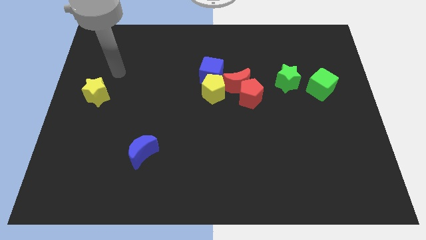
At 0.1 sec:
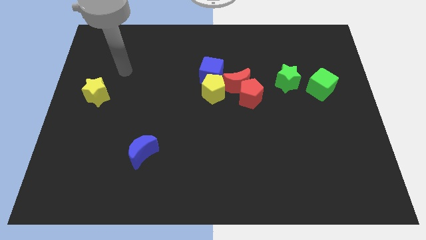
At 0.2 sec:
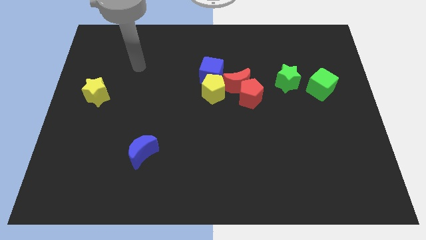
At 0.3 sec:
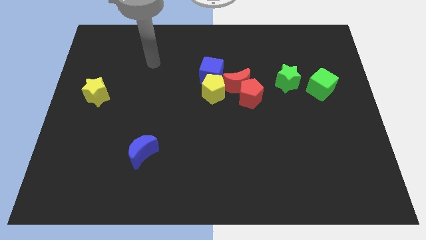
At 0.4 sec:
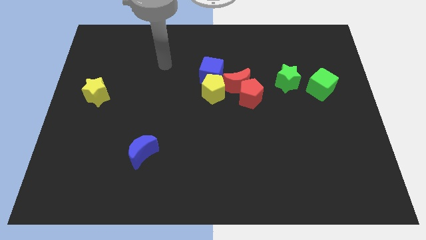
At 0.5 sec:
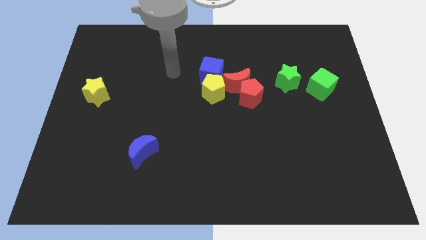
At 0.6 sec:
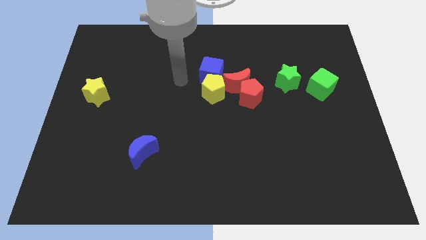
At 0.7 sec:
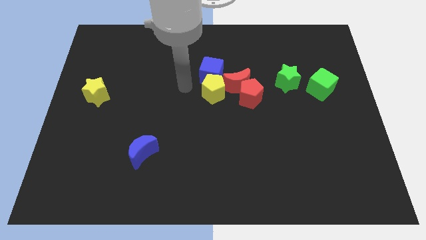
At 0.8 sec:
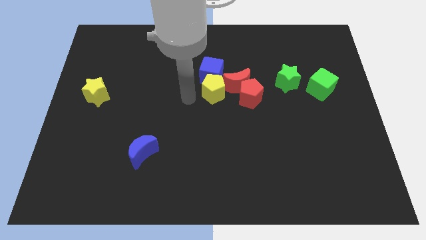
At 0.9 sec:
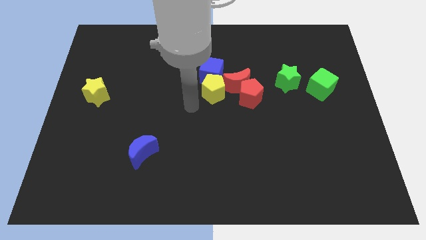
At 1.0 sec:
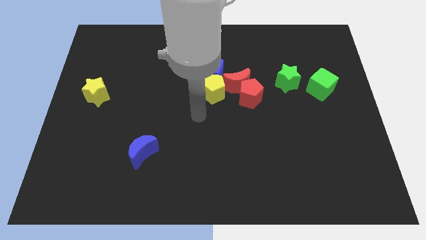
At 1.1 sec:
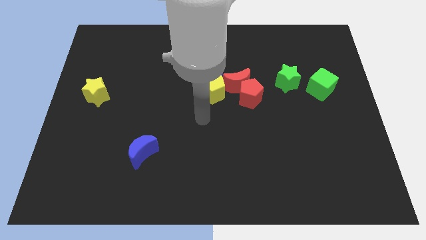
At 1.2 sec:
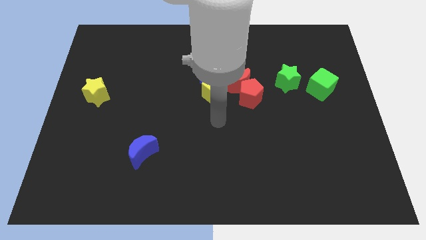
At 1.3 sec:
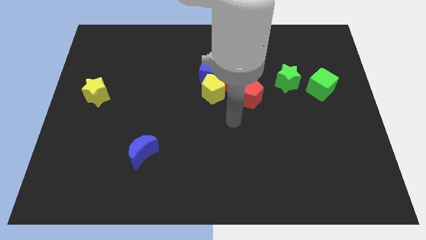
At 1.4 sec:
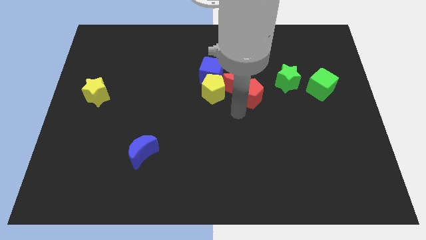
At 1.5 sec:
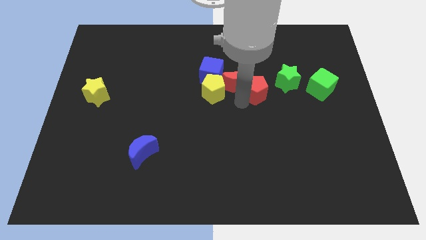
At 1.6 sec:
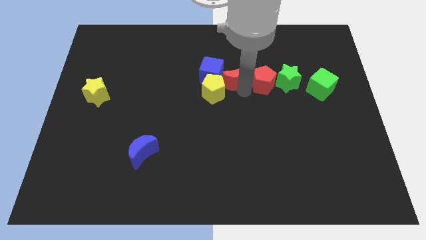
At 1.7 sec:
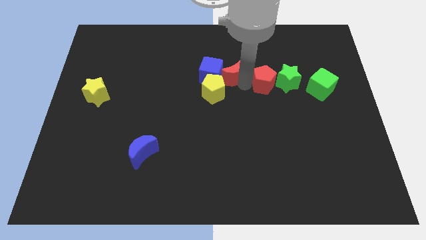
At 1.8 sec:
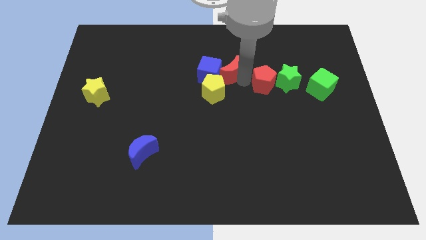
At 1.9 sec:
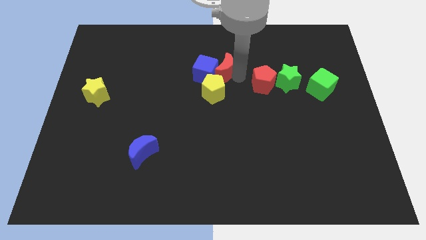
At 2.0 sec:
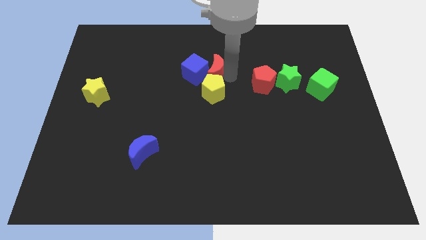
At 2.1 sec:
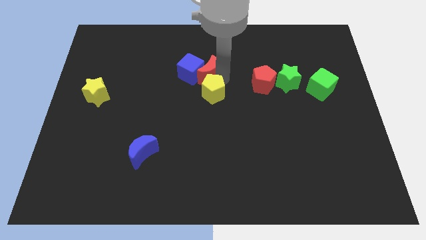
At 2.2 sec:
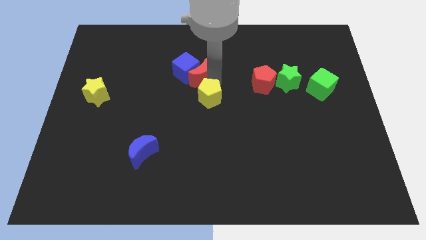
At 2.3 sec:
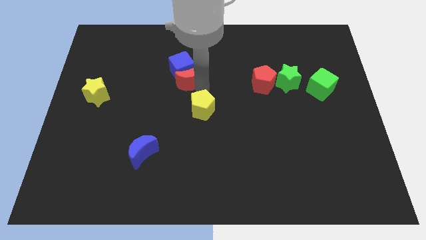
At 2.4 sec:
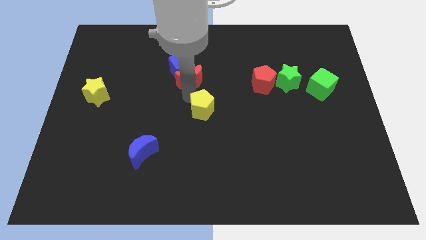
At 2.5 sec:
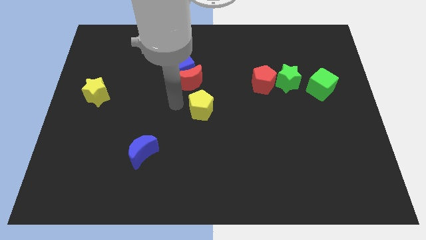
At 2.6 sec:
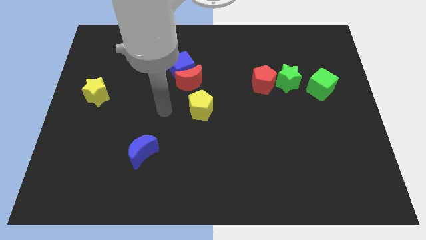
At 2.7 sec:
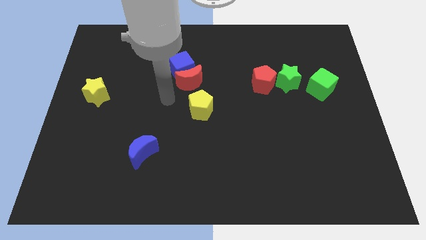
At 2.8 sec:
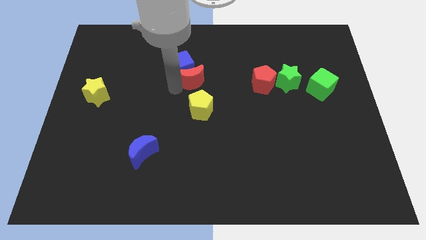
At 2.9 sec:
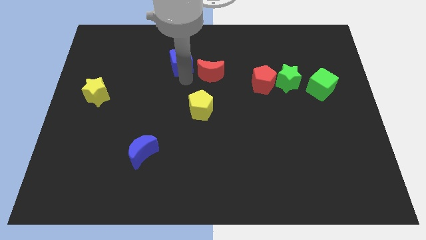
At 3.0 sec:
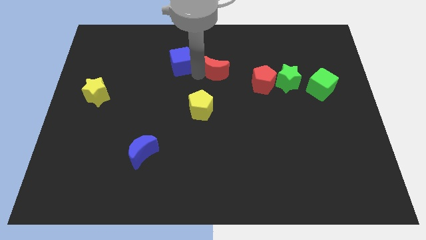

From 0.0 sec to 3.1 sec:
separate the red moon and blue cube from the group of blocks

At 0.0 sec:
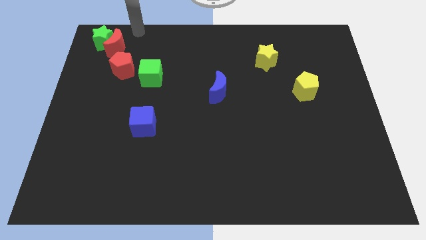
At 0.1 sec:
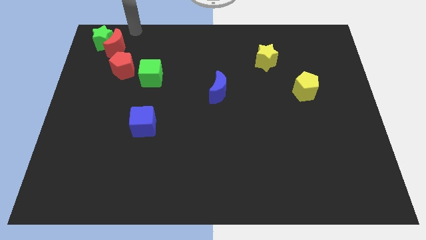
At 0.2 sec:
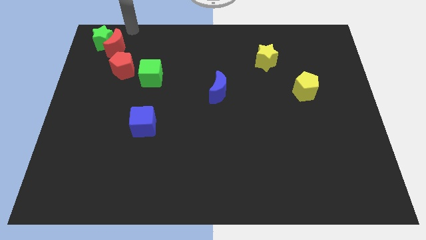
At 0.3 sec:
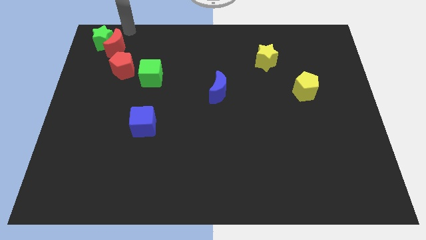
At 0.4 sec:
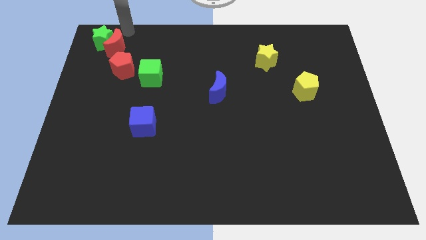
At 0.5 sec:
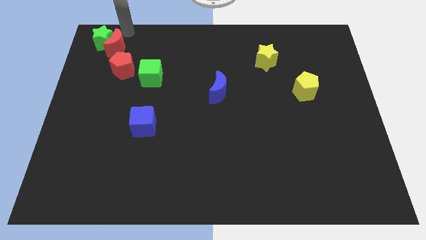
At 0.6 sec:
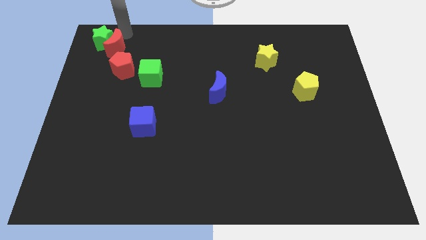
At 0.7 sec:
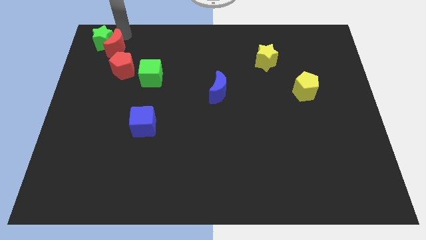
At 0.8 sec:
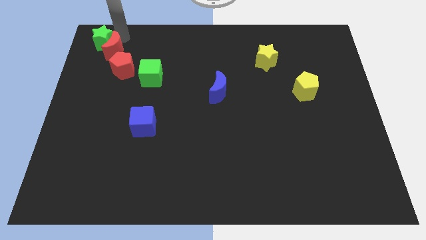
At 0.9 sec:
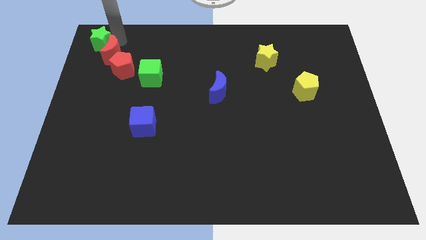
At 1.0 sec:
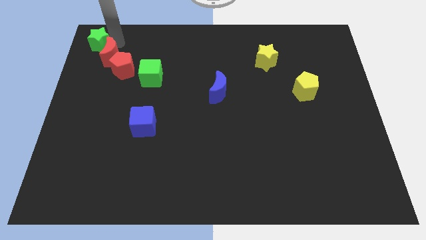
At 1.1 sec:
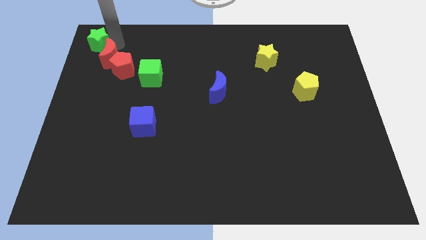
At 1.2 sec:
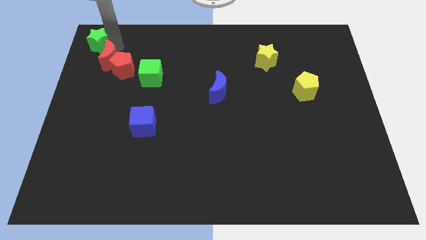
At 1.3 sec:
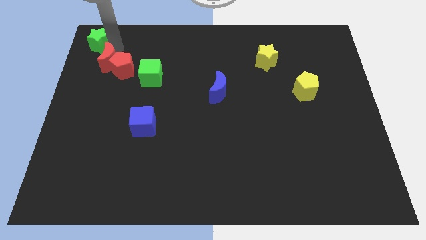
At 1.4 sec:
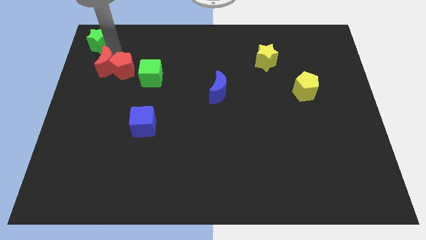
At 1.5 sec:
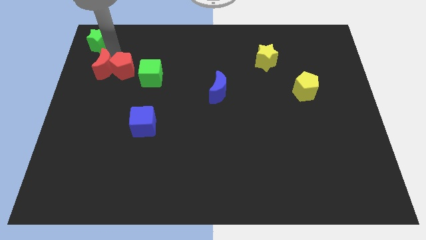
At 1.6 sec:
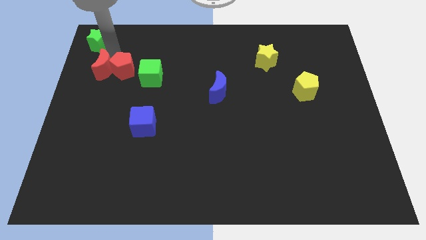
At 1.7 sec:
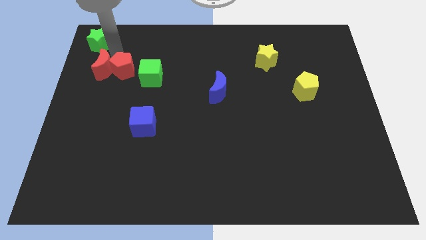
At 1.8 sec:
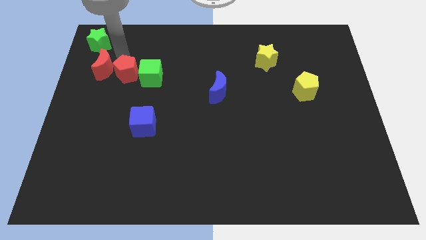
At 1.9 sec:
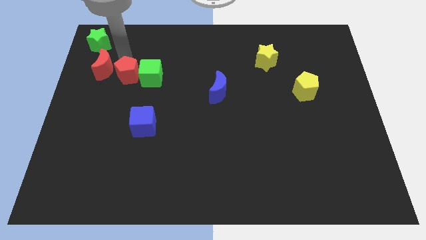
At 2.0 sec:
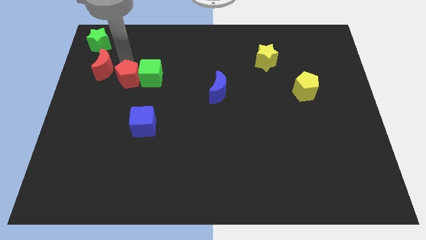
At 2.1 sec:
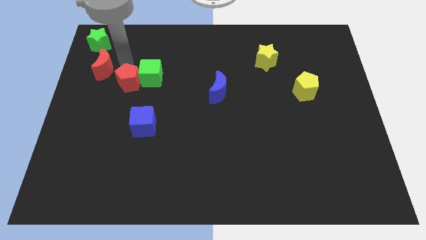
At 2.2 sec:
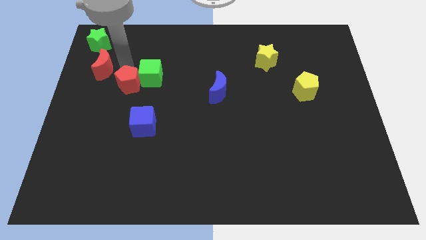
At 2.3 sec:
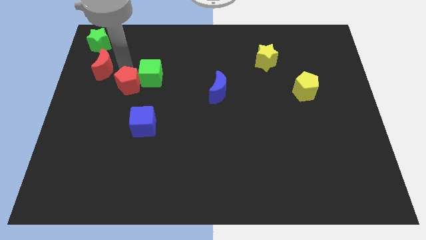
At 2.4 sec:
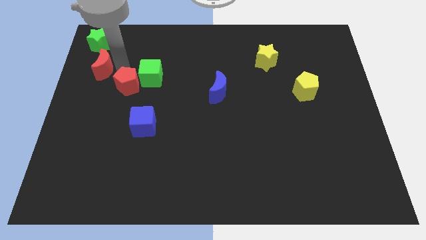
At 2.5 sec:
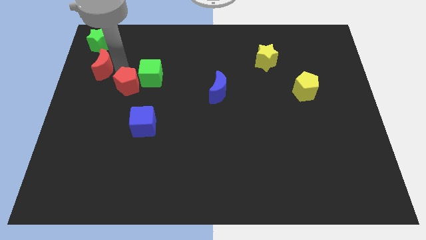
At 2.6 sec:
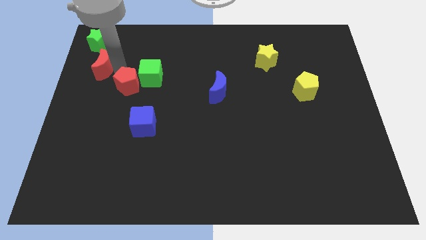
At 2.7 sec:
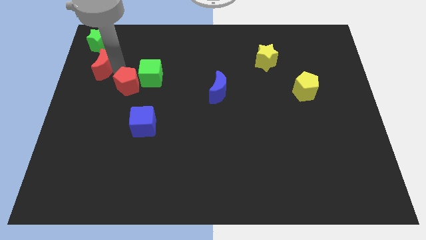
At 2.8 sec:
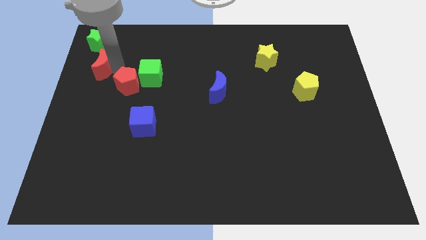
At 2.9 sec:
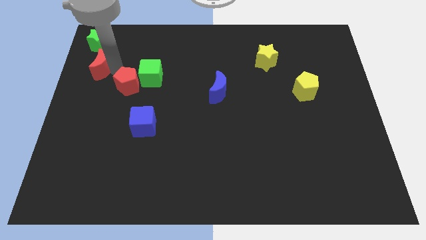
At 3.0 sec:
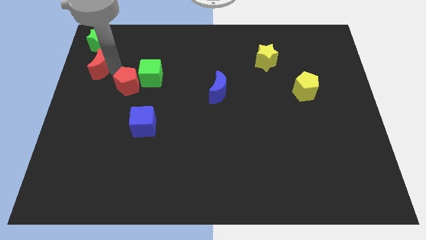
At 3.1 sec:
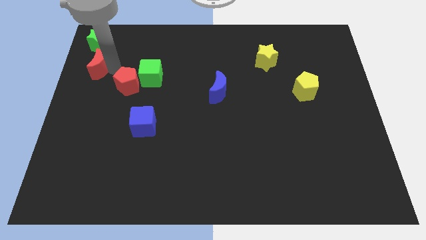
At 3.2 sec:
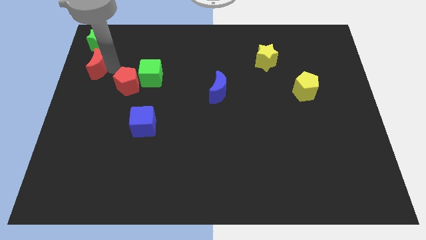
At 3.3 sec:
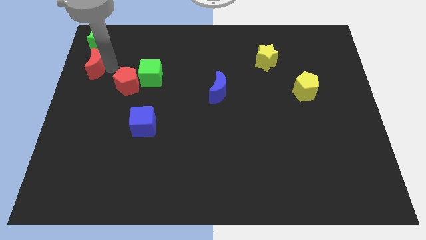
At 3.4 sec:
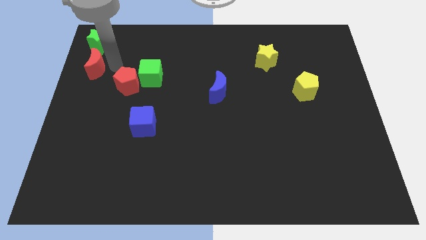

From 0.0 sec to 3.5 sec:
place red crescent below green star

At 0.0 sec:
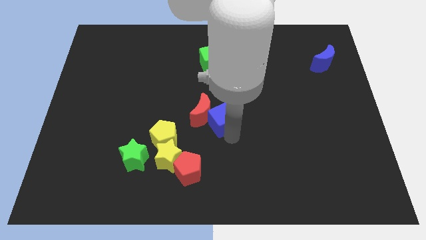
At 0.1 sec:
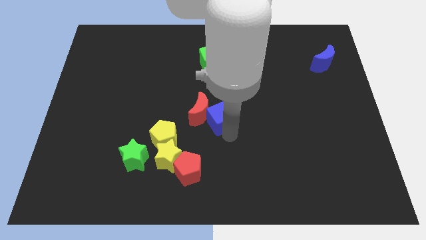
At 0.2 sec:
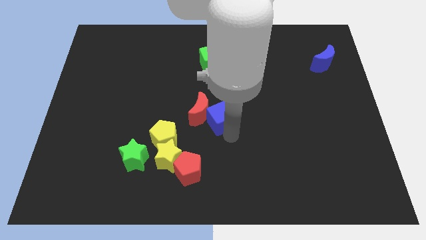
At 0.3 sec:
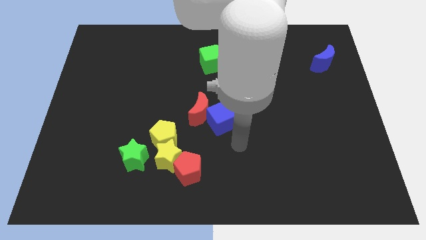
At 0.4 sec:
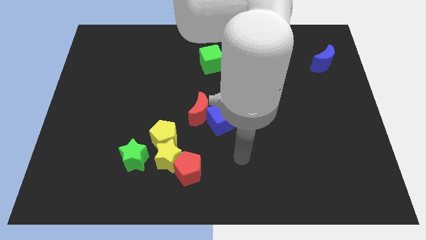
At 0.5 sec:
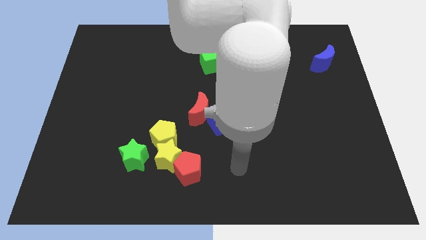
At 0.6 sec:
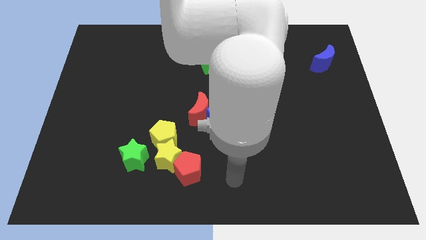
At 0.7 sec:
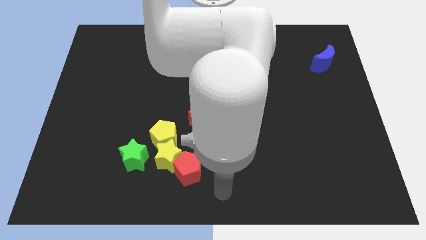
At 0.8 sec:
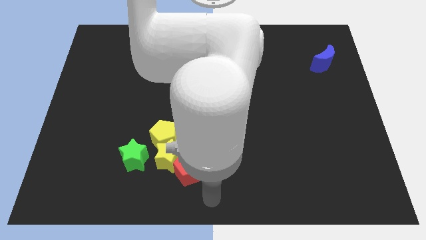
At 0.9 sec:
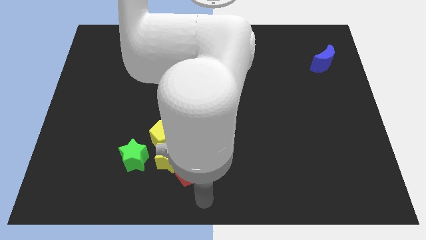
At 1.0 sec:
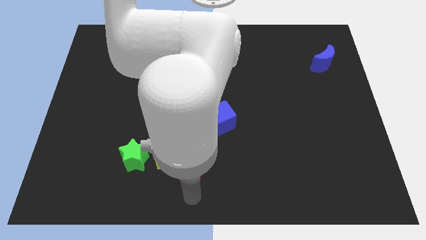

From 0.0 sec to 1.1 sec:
push the red crescent along with blue cube

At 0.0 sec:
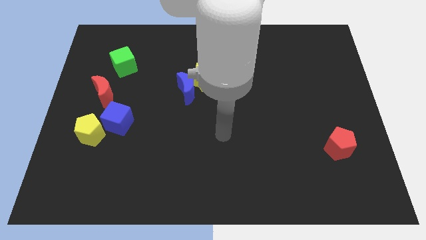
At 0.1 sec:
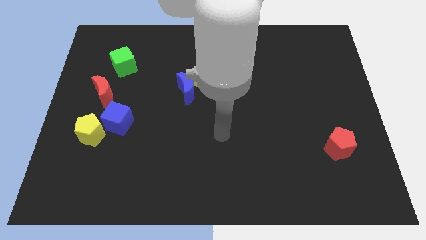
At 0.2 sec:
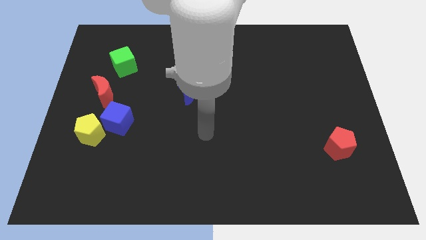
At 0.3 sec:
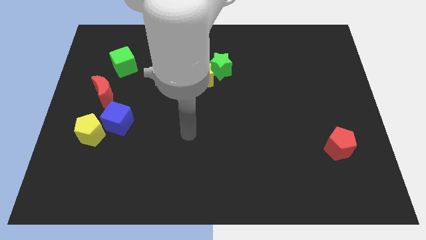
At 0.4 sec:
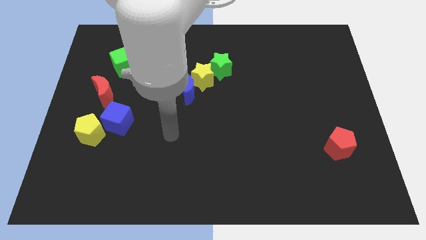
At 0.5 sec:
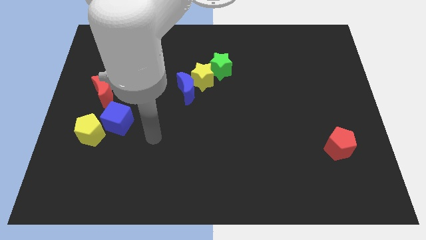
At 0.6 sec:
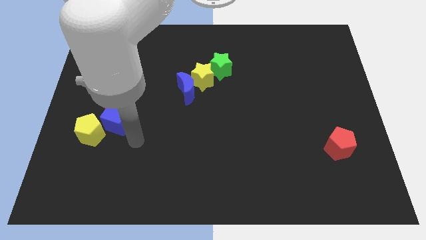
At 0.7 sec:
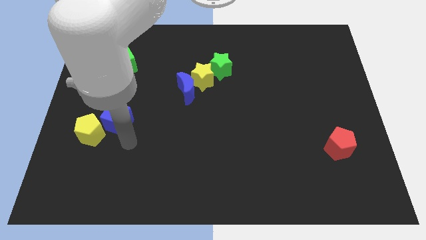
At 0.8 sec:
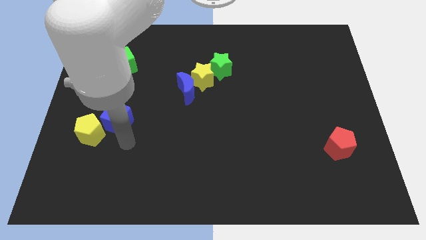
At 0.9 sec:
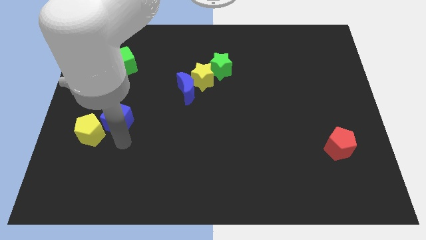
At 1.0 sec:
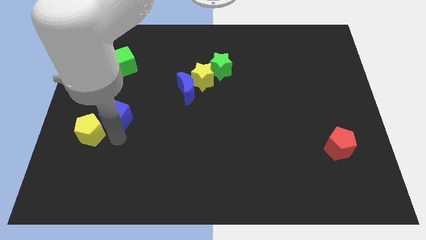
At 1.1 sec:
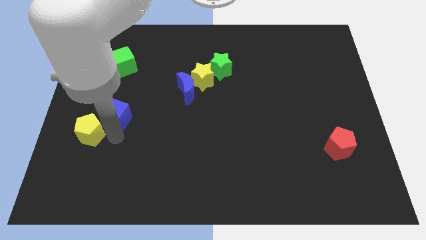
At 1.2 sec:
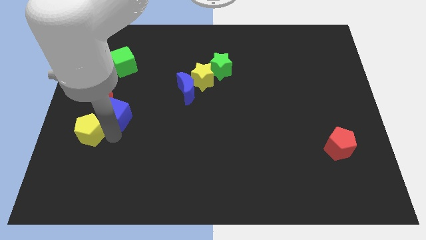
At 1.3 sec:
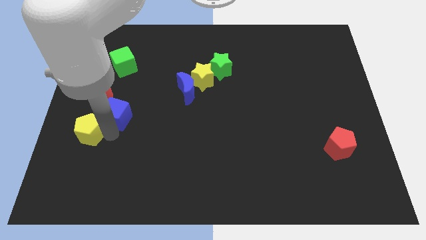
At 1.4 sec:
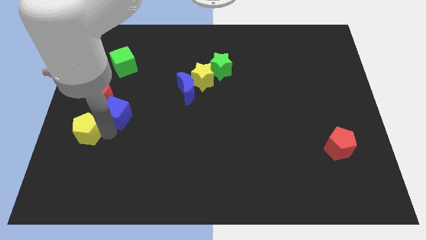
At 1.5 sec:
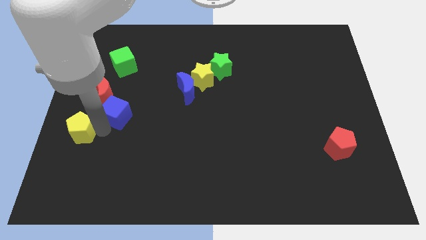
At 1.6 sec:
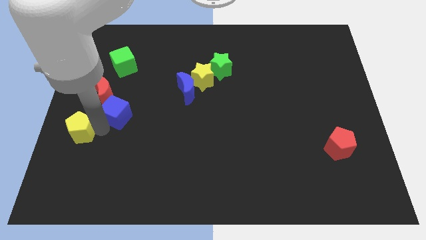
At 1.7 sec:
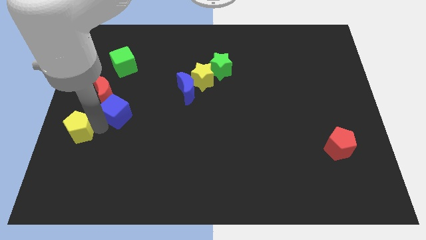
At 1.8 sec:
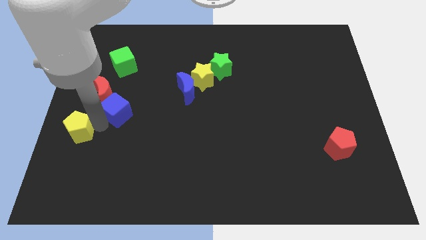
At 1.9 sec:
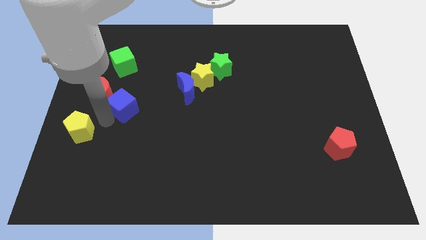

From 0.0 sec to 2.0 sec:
separate the blue cube from the yellow pentagon
